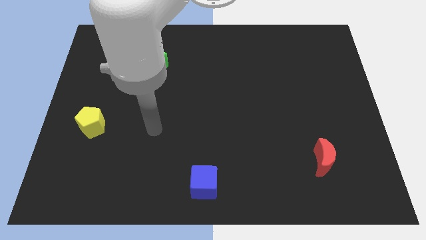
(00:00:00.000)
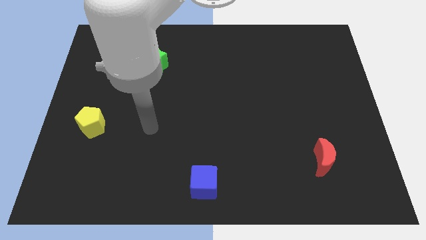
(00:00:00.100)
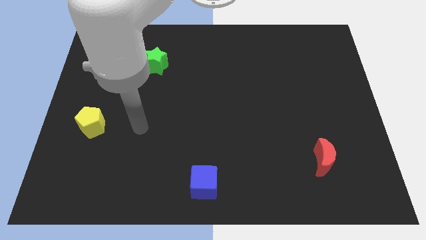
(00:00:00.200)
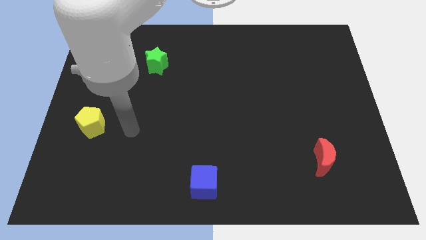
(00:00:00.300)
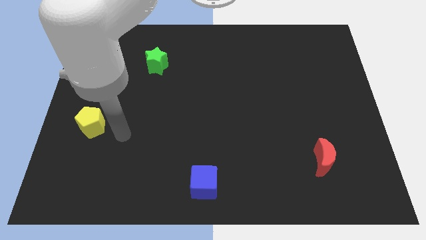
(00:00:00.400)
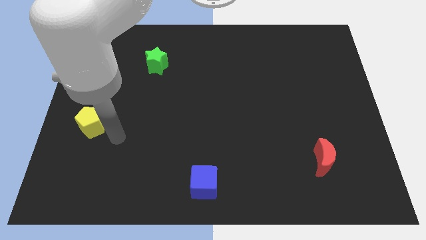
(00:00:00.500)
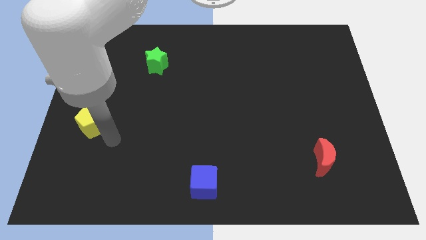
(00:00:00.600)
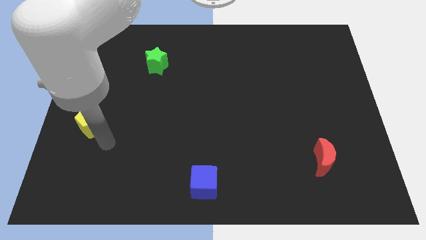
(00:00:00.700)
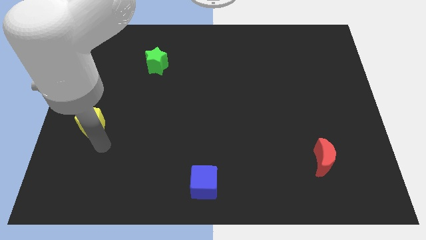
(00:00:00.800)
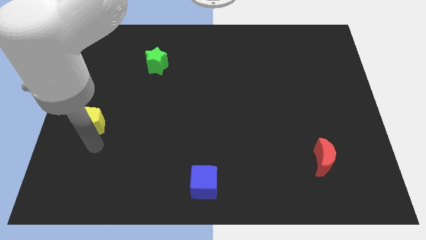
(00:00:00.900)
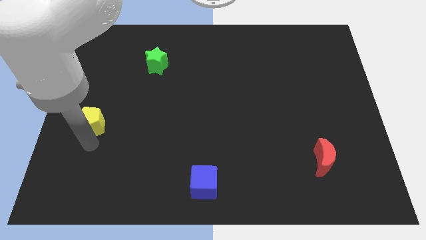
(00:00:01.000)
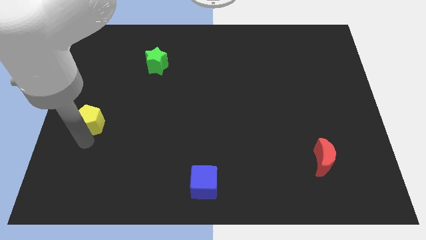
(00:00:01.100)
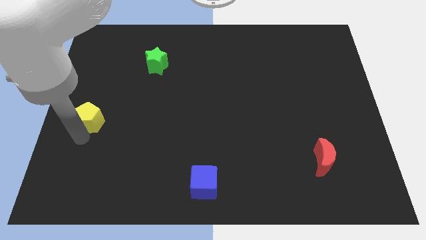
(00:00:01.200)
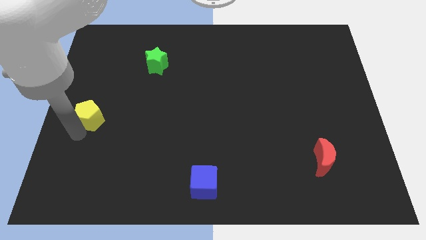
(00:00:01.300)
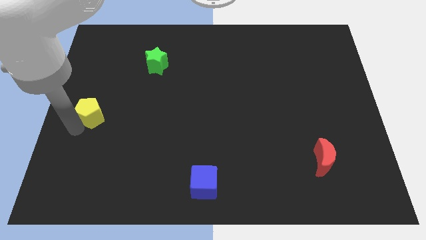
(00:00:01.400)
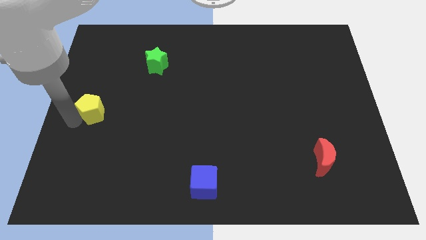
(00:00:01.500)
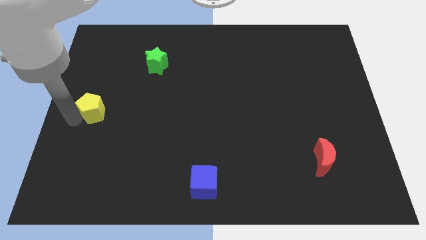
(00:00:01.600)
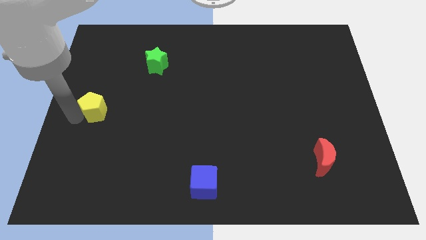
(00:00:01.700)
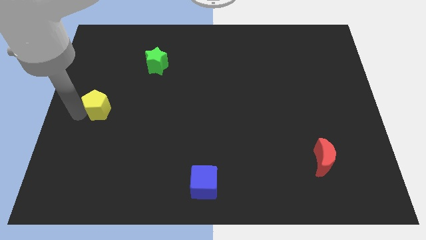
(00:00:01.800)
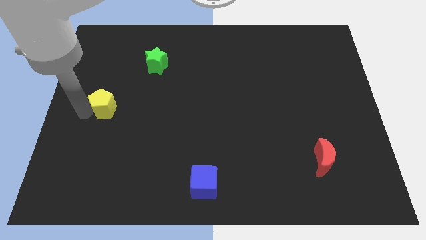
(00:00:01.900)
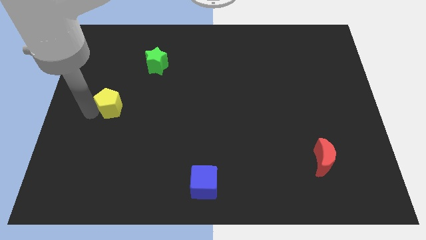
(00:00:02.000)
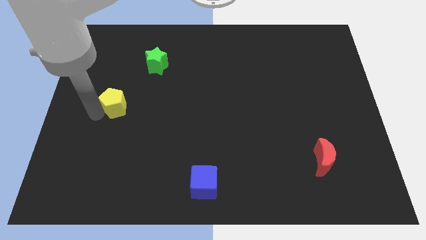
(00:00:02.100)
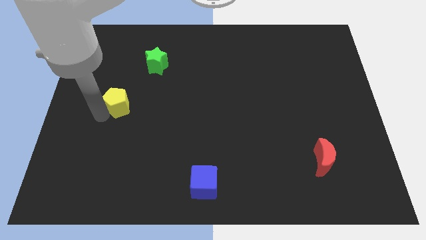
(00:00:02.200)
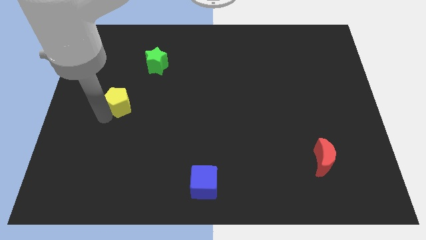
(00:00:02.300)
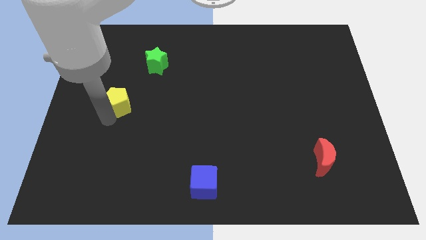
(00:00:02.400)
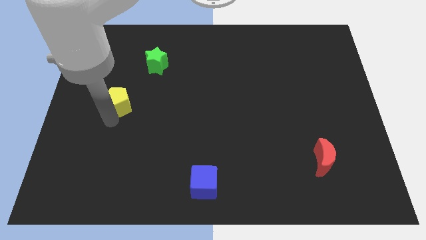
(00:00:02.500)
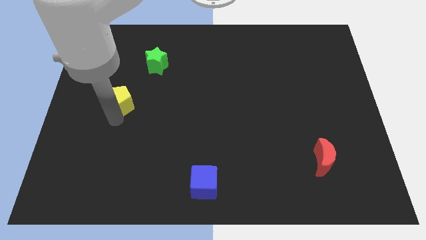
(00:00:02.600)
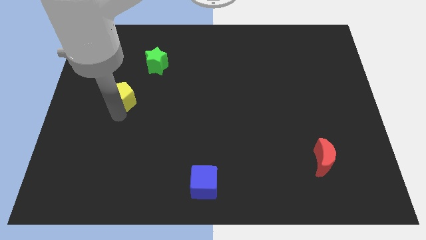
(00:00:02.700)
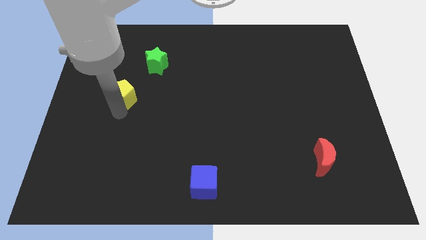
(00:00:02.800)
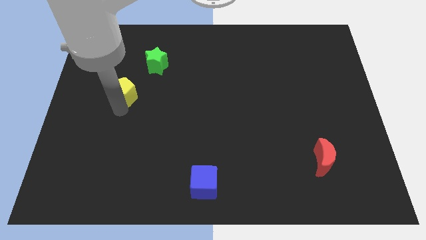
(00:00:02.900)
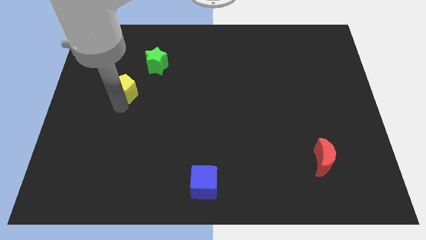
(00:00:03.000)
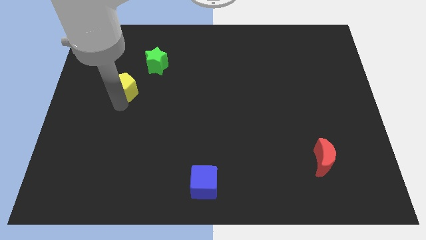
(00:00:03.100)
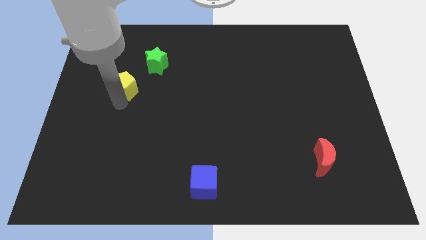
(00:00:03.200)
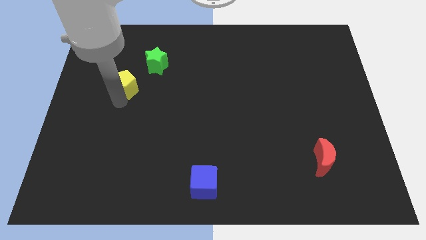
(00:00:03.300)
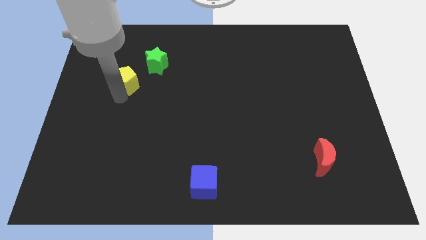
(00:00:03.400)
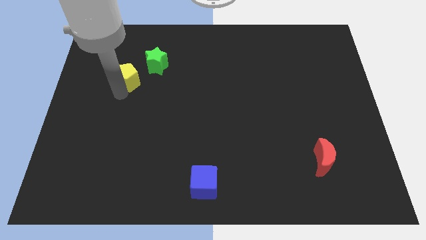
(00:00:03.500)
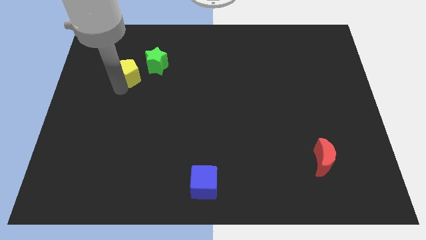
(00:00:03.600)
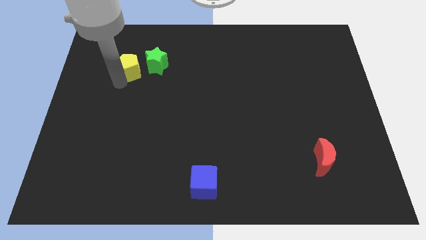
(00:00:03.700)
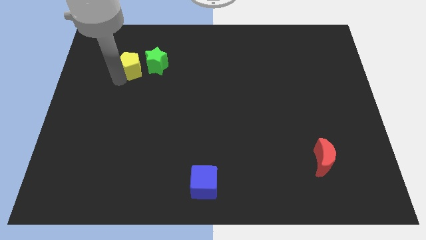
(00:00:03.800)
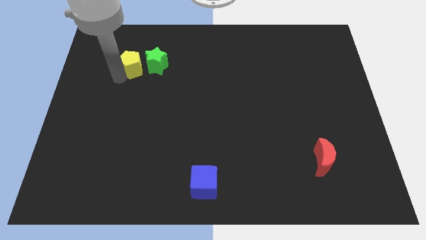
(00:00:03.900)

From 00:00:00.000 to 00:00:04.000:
move the yellow block next to the green block

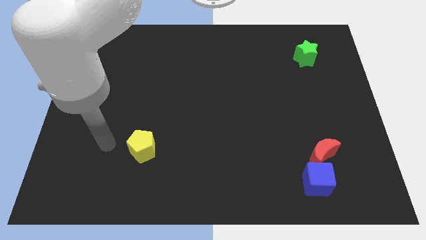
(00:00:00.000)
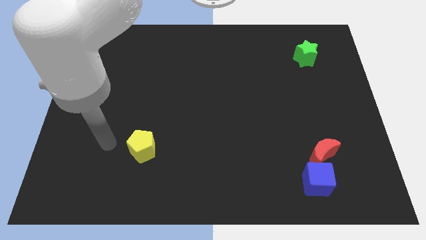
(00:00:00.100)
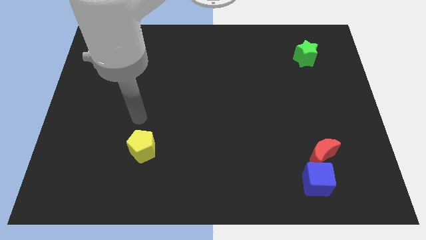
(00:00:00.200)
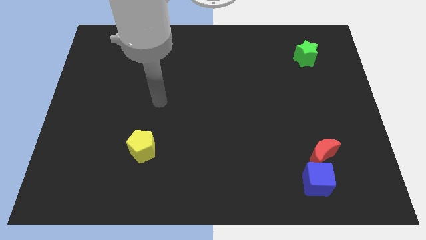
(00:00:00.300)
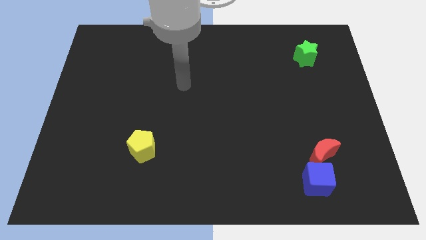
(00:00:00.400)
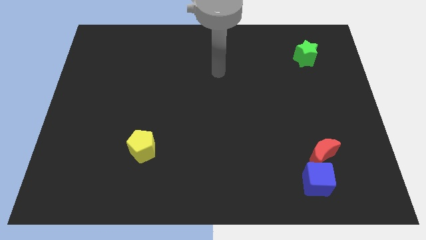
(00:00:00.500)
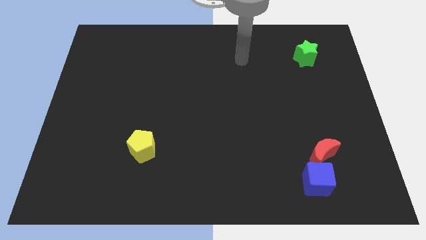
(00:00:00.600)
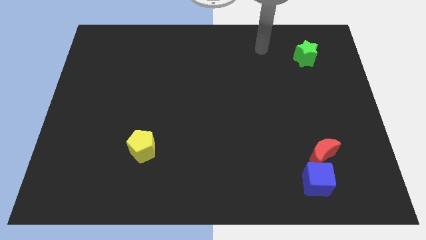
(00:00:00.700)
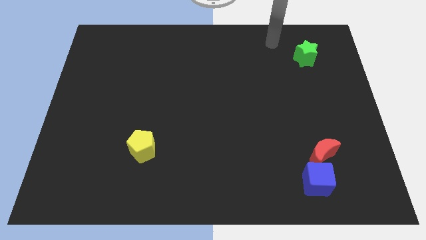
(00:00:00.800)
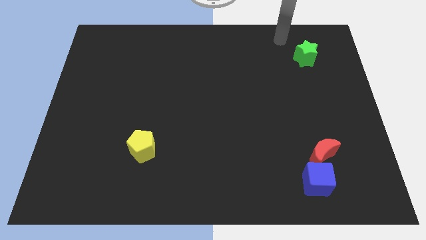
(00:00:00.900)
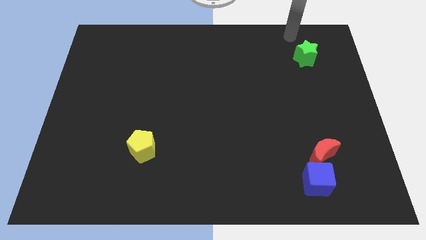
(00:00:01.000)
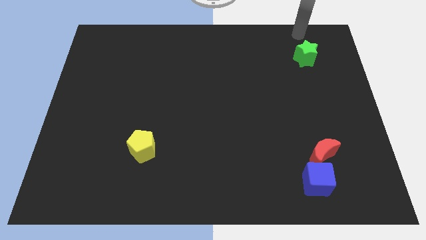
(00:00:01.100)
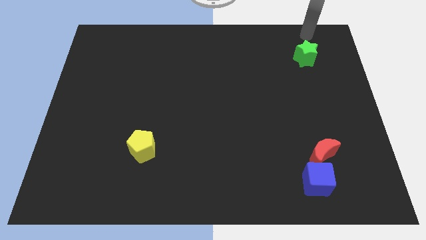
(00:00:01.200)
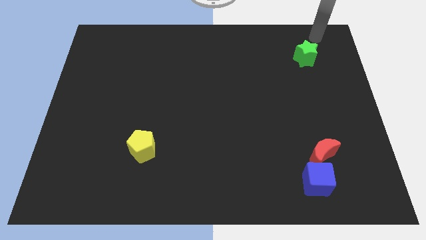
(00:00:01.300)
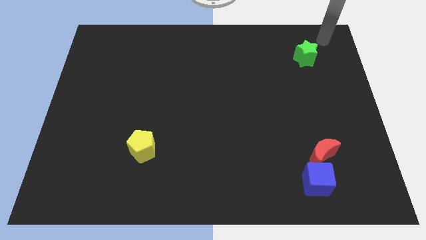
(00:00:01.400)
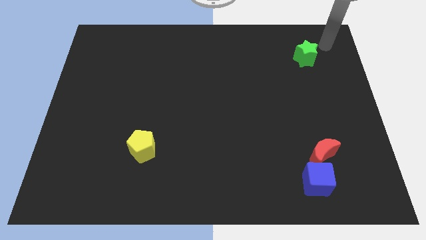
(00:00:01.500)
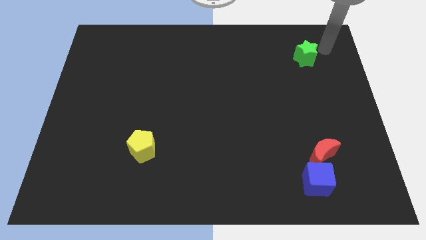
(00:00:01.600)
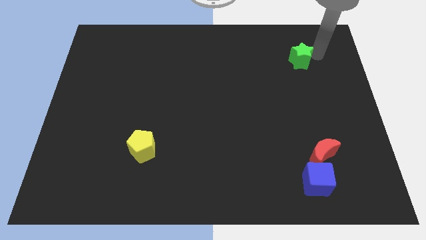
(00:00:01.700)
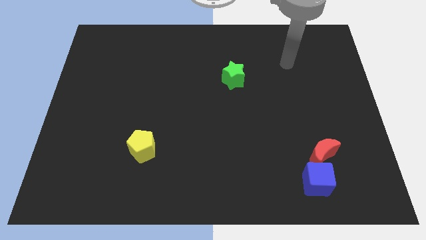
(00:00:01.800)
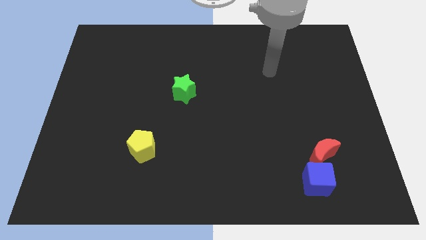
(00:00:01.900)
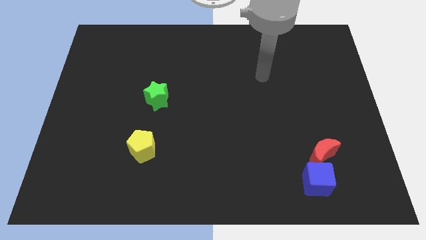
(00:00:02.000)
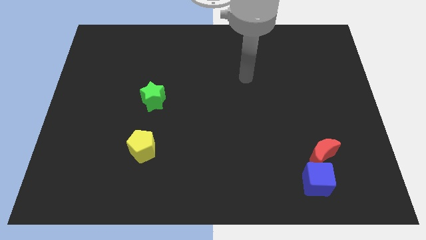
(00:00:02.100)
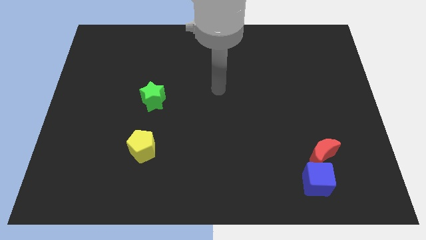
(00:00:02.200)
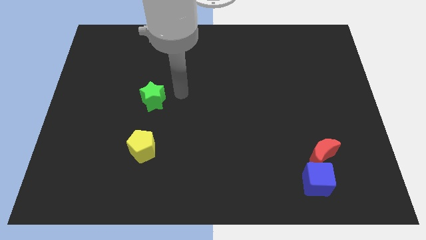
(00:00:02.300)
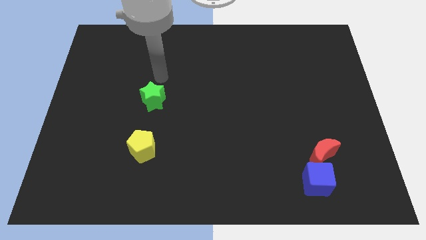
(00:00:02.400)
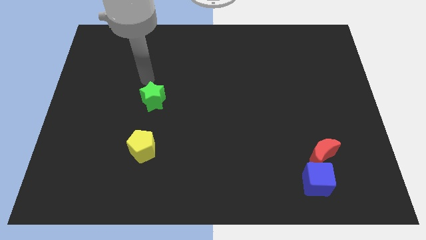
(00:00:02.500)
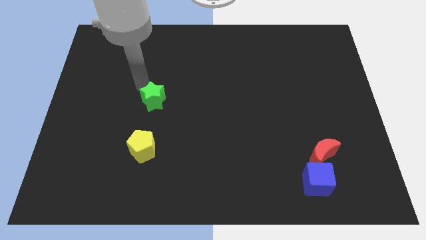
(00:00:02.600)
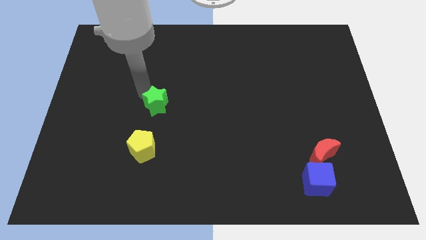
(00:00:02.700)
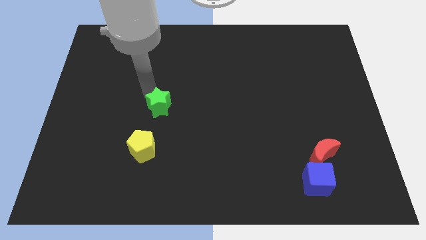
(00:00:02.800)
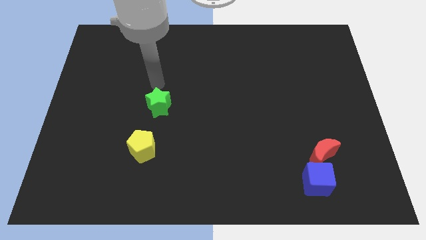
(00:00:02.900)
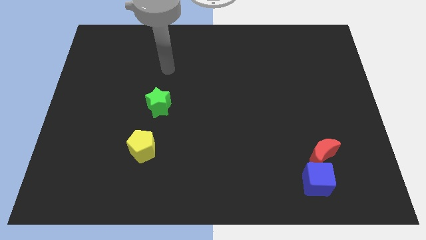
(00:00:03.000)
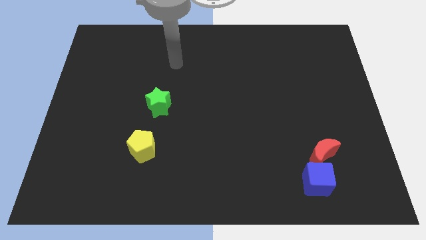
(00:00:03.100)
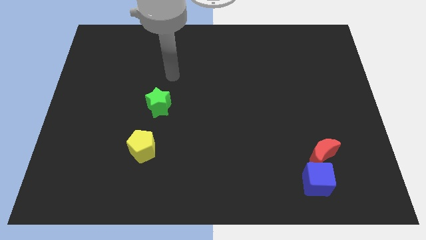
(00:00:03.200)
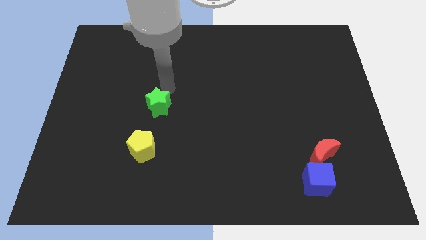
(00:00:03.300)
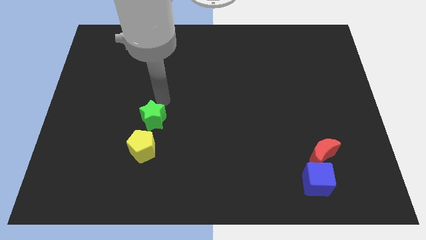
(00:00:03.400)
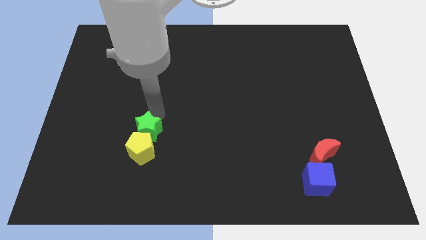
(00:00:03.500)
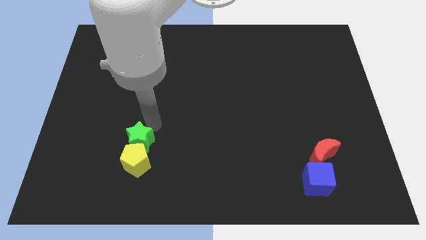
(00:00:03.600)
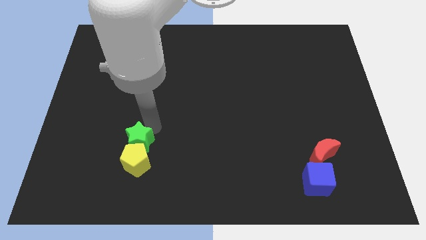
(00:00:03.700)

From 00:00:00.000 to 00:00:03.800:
put the star to the yellow block
